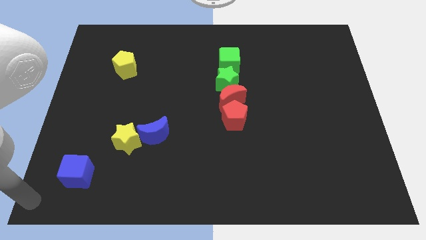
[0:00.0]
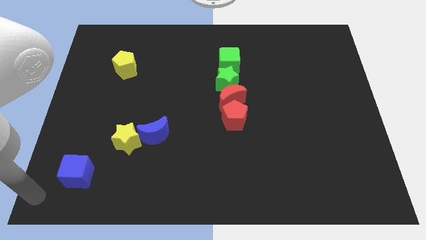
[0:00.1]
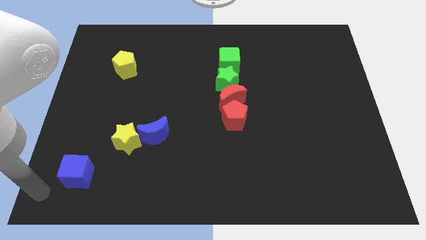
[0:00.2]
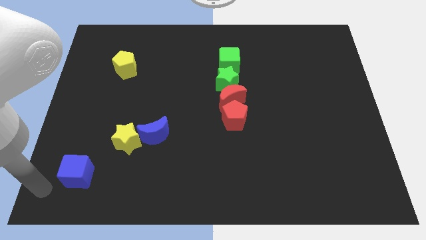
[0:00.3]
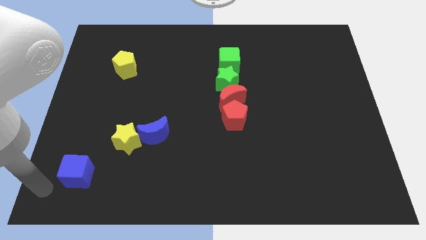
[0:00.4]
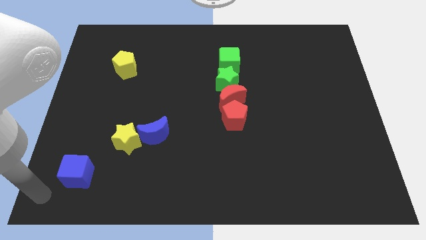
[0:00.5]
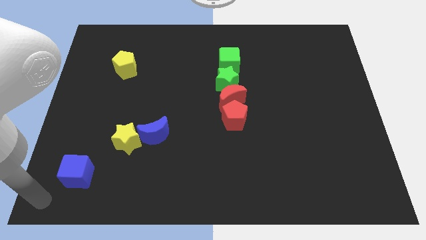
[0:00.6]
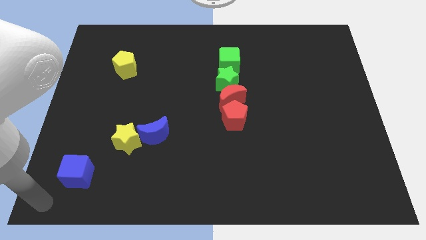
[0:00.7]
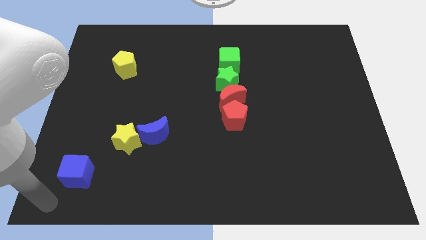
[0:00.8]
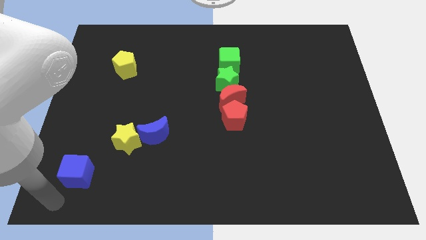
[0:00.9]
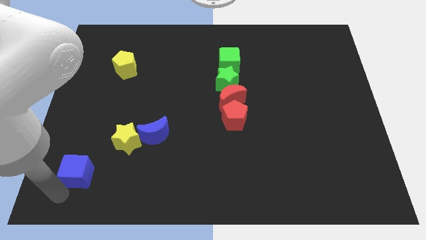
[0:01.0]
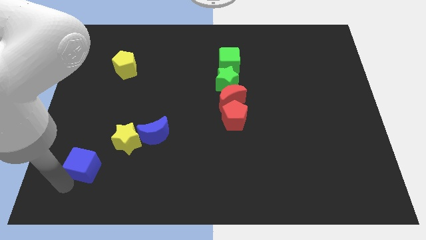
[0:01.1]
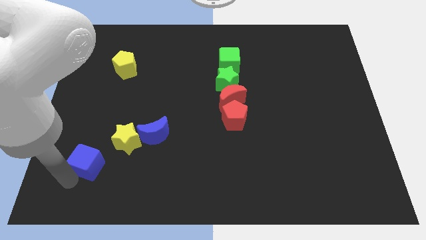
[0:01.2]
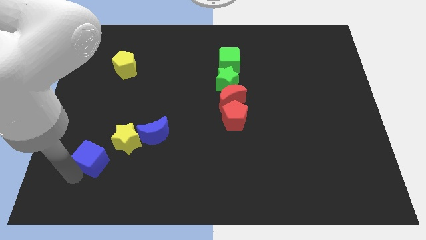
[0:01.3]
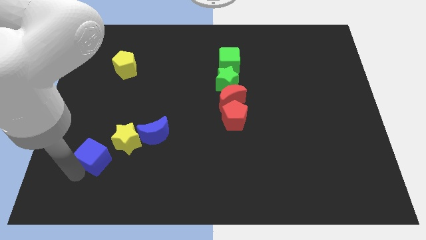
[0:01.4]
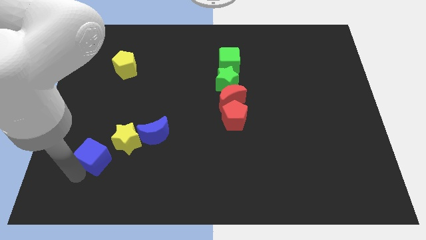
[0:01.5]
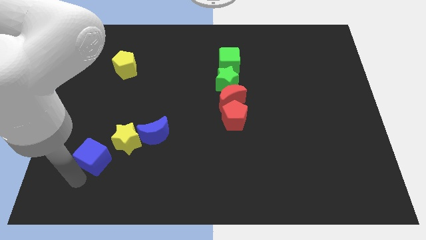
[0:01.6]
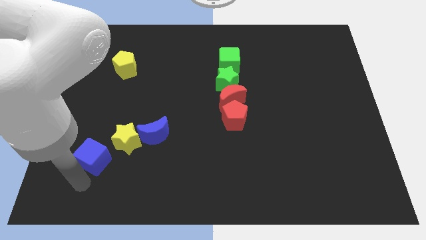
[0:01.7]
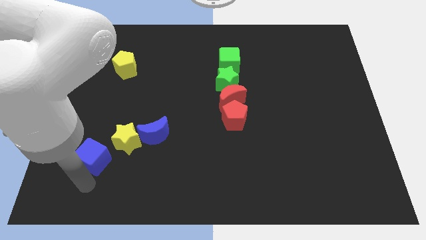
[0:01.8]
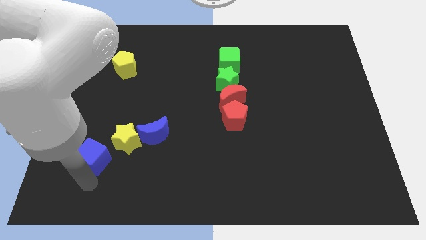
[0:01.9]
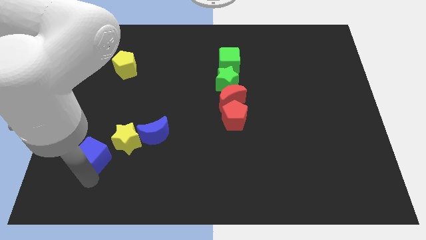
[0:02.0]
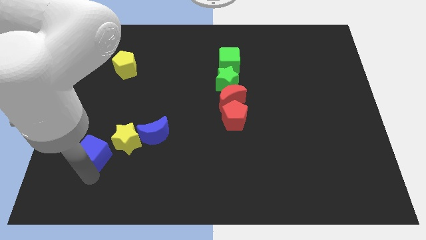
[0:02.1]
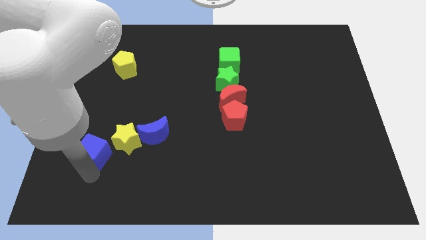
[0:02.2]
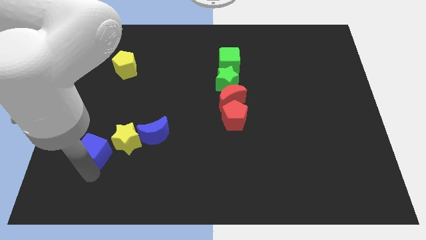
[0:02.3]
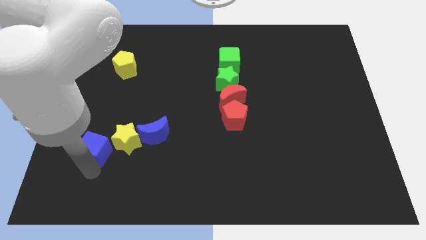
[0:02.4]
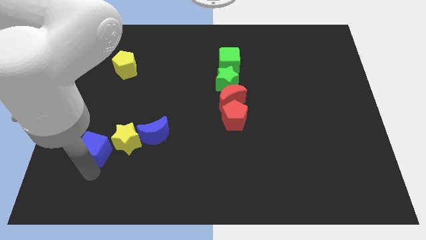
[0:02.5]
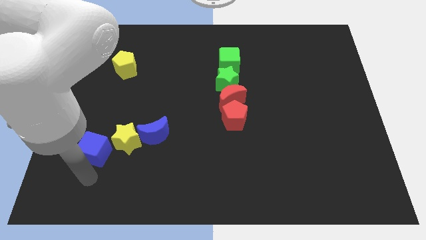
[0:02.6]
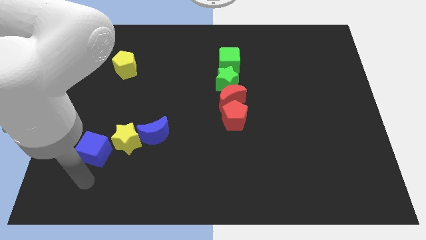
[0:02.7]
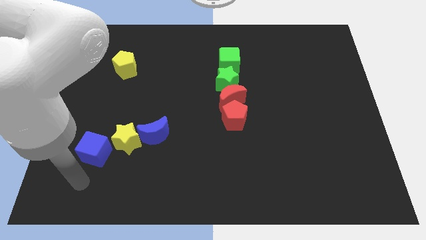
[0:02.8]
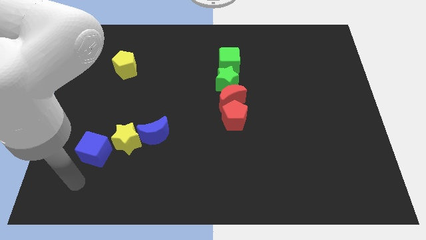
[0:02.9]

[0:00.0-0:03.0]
move the blue cube close to the yellow star

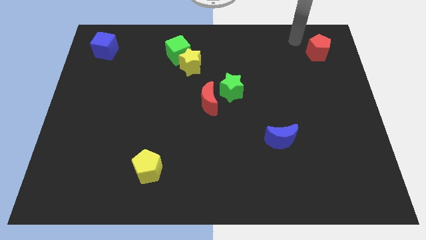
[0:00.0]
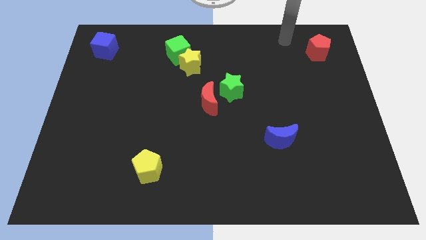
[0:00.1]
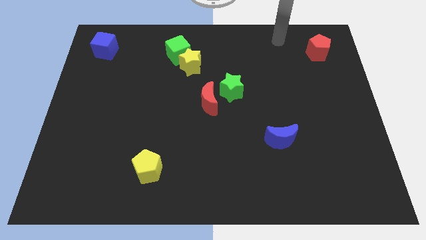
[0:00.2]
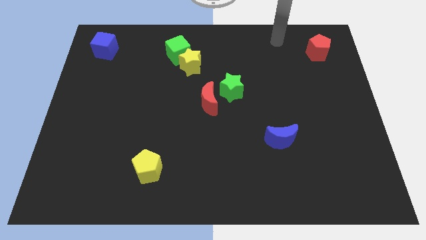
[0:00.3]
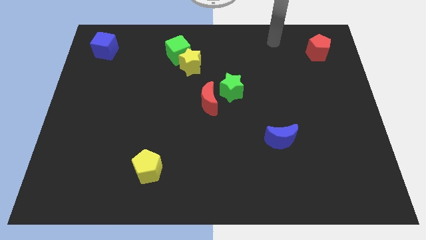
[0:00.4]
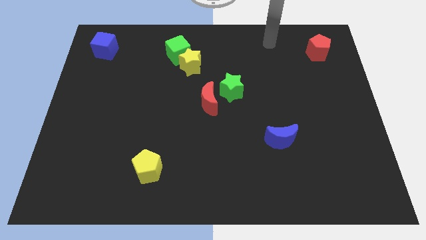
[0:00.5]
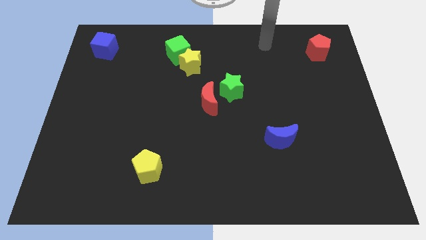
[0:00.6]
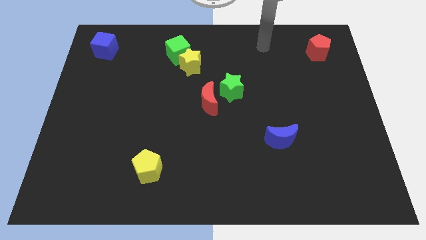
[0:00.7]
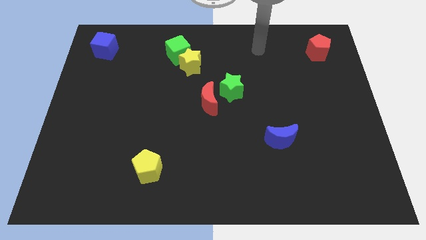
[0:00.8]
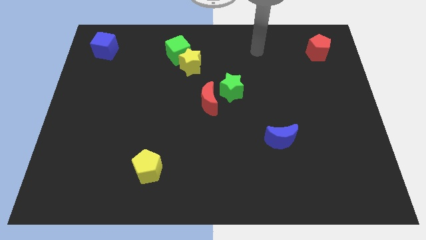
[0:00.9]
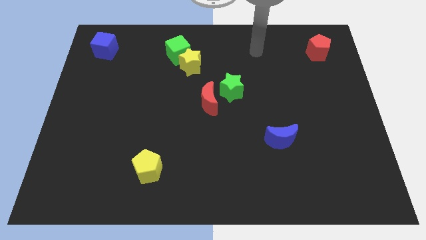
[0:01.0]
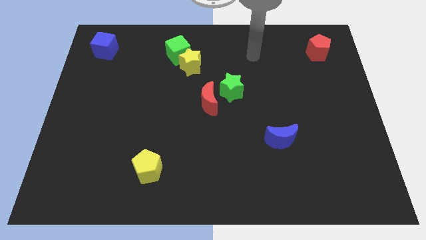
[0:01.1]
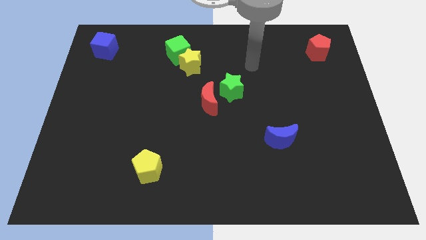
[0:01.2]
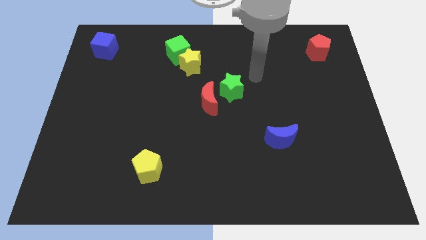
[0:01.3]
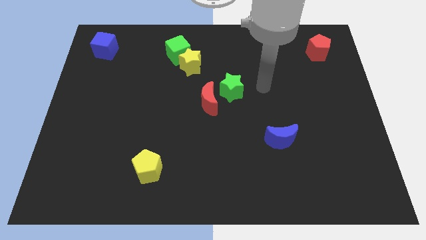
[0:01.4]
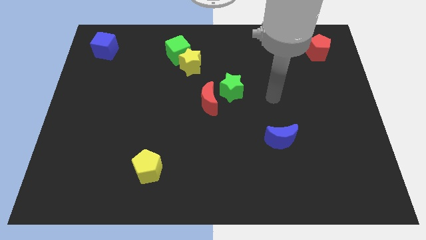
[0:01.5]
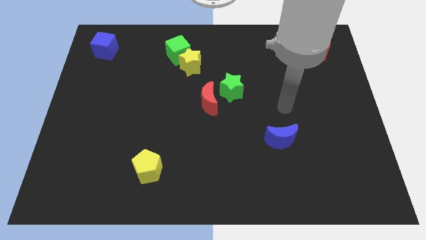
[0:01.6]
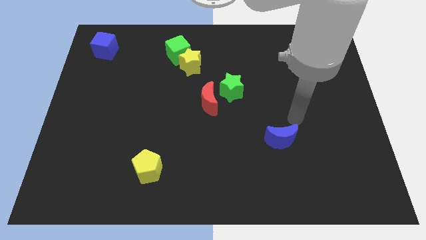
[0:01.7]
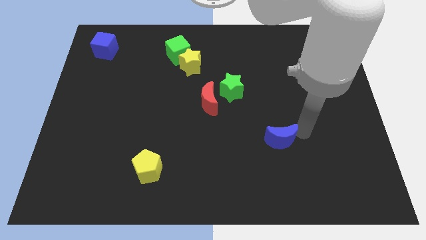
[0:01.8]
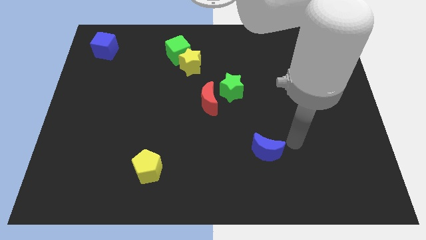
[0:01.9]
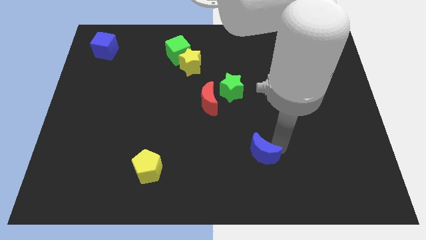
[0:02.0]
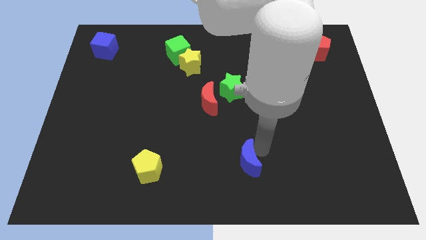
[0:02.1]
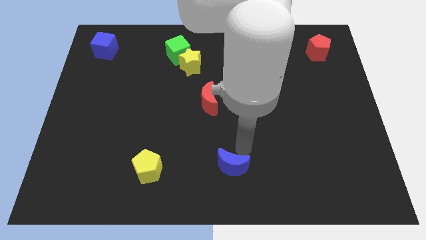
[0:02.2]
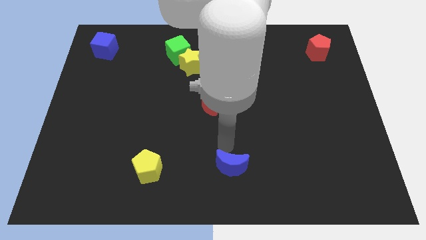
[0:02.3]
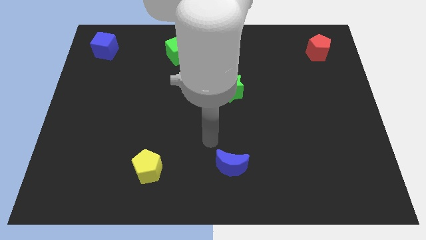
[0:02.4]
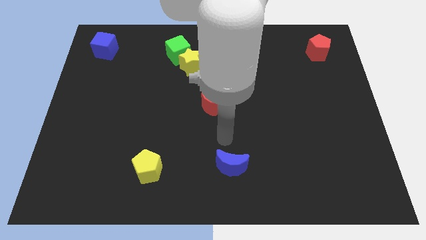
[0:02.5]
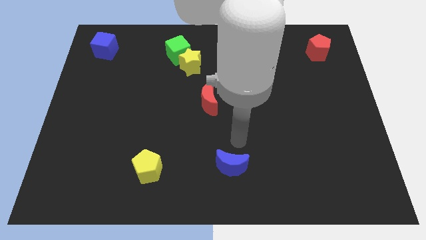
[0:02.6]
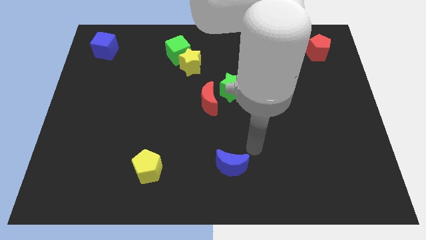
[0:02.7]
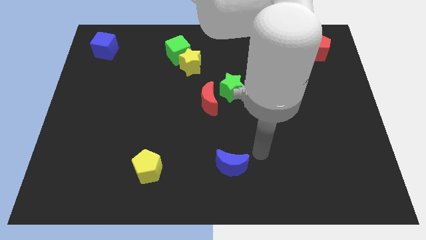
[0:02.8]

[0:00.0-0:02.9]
push the blue crescent to the bottom of the green star

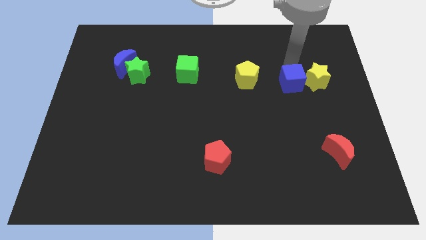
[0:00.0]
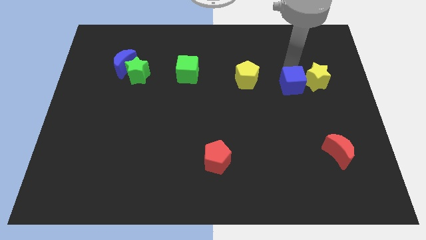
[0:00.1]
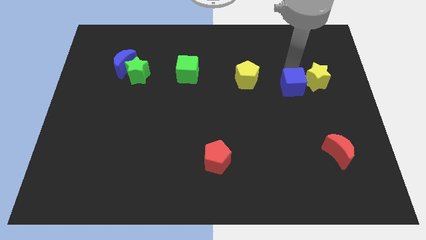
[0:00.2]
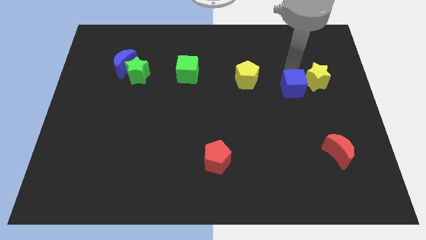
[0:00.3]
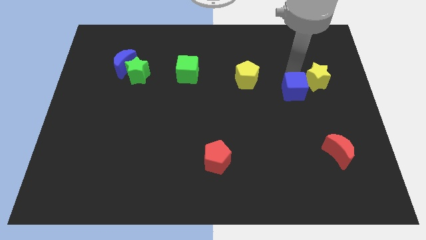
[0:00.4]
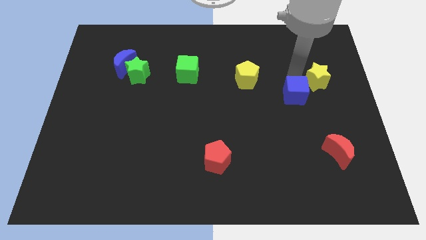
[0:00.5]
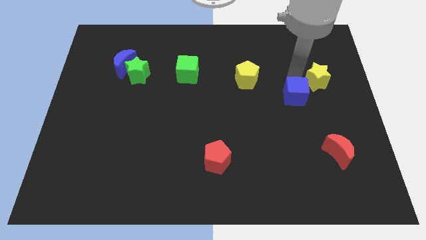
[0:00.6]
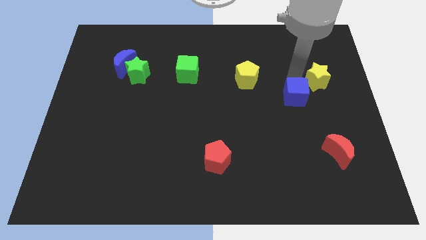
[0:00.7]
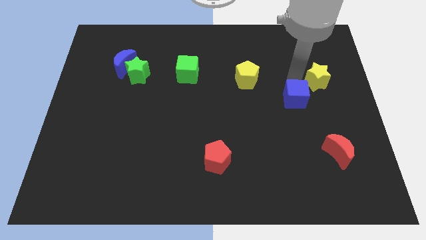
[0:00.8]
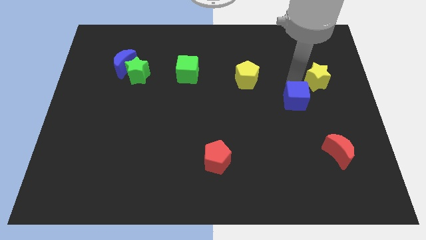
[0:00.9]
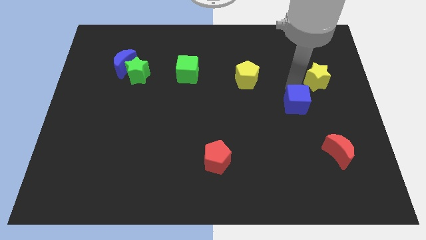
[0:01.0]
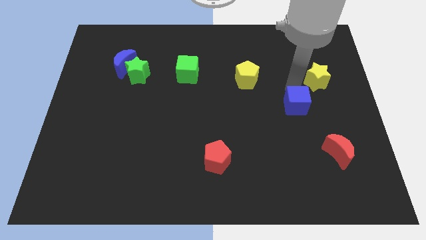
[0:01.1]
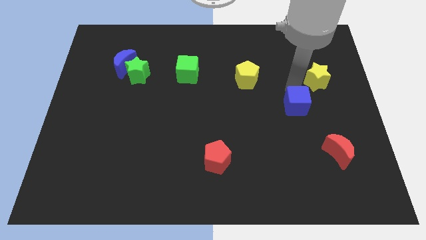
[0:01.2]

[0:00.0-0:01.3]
push the blue cube away from the yellow star

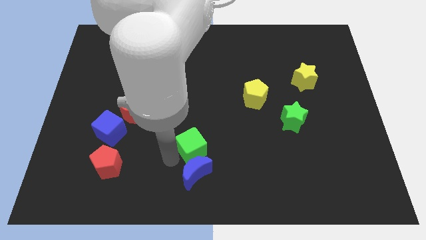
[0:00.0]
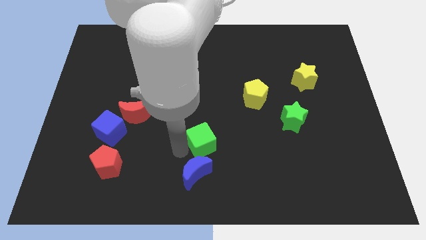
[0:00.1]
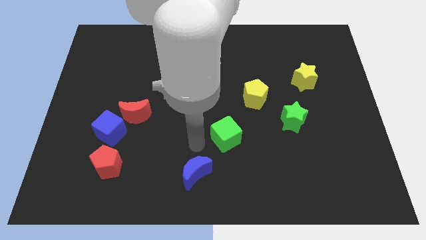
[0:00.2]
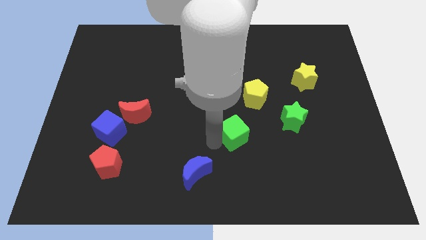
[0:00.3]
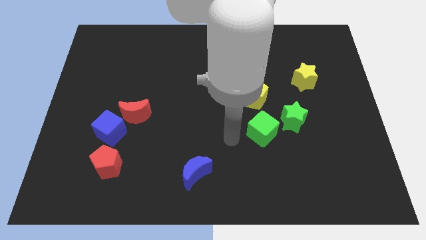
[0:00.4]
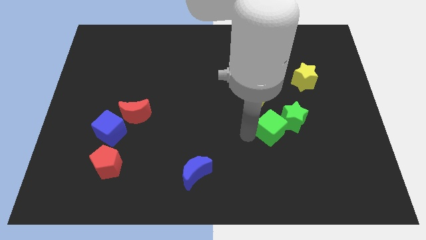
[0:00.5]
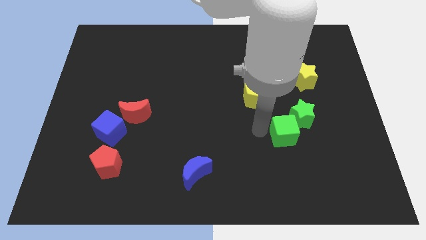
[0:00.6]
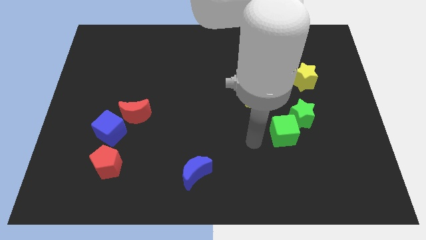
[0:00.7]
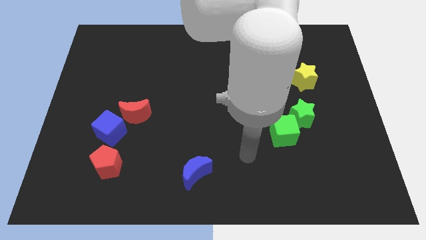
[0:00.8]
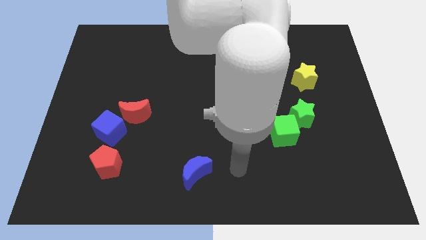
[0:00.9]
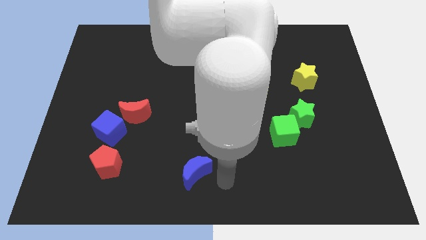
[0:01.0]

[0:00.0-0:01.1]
move the green cube close to the green star

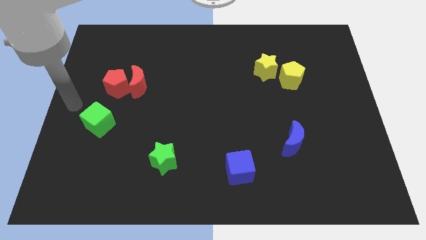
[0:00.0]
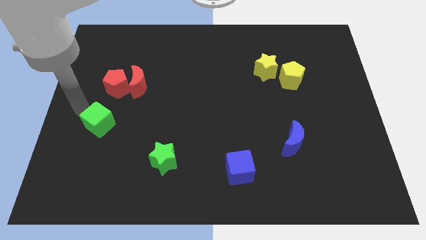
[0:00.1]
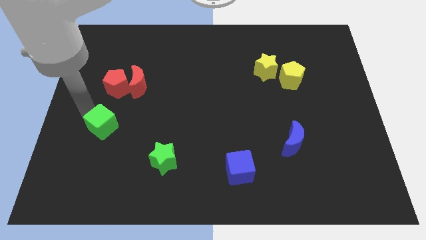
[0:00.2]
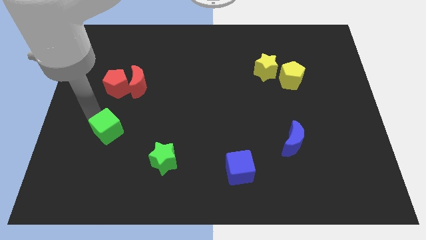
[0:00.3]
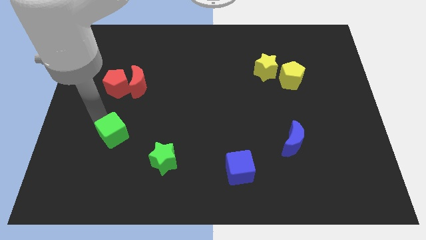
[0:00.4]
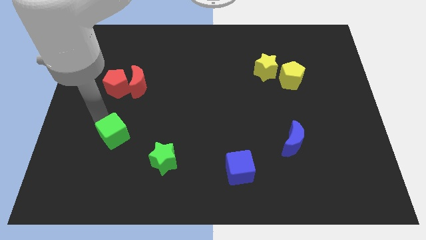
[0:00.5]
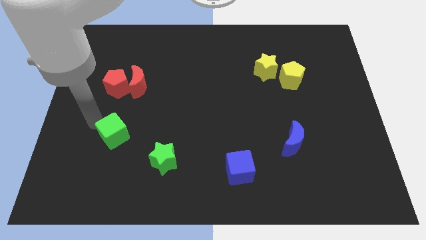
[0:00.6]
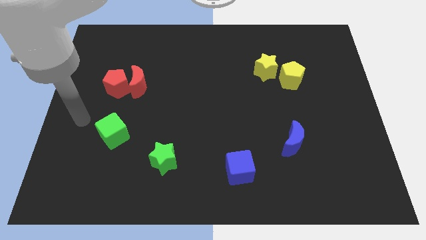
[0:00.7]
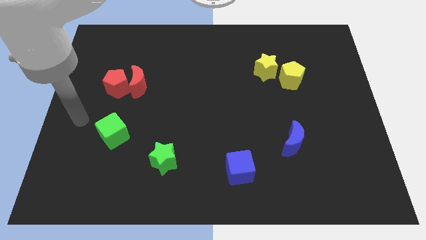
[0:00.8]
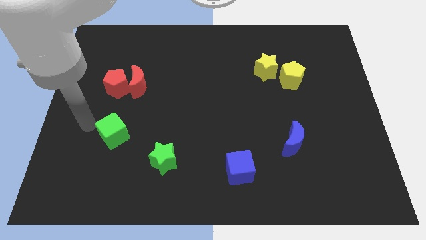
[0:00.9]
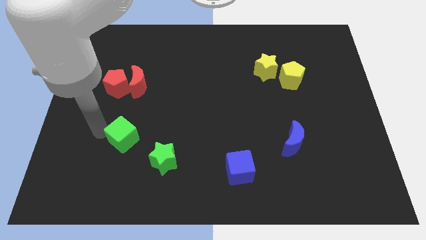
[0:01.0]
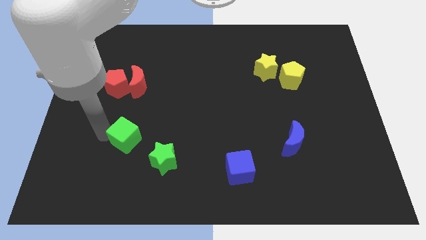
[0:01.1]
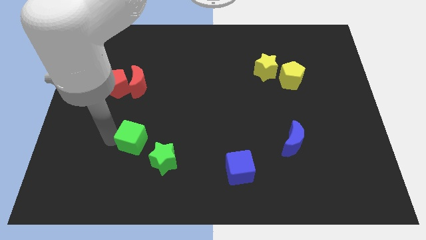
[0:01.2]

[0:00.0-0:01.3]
move the green cube towards the top left of the green star
